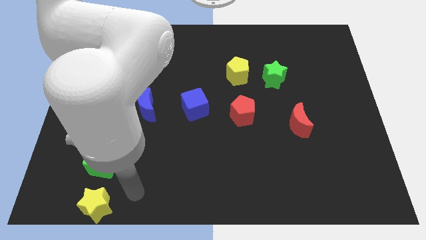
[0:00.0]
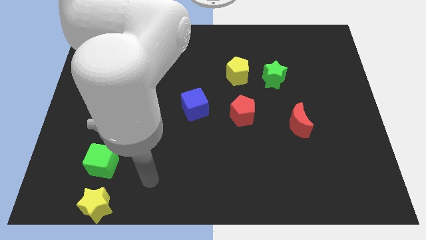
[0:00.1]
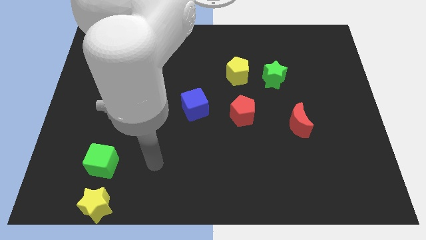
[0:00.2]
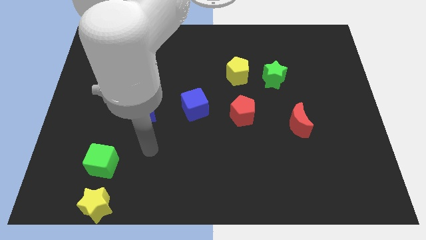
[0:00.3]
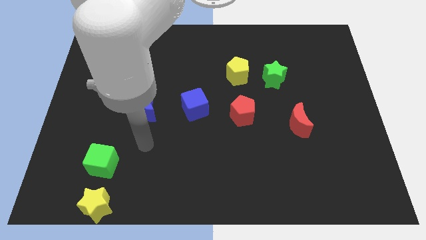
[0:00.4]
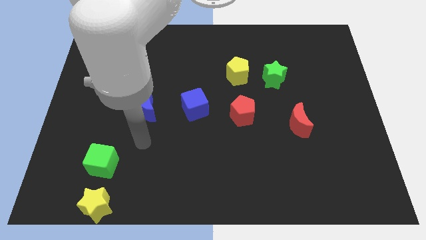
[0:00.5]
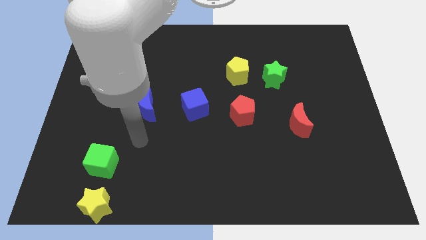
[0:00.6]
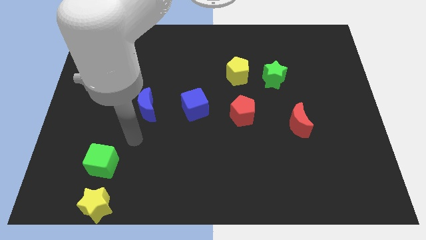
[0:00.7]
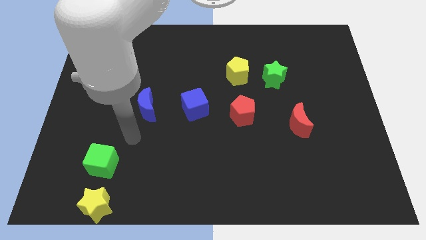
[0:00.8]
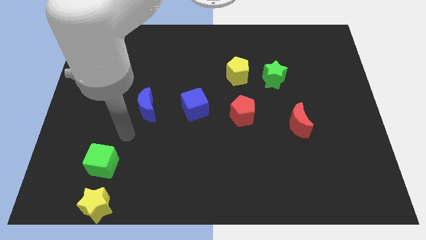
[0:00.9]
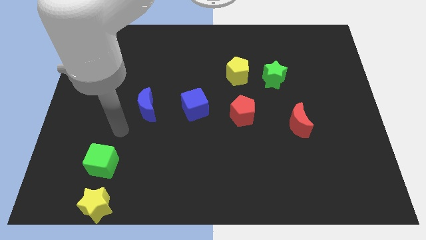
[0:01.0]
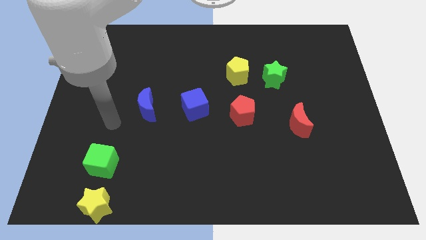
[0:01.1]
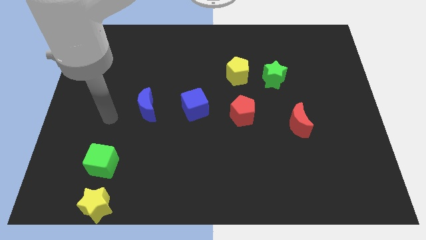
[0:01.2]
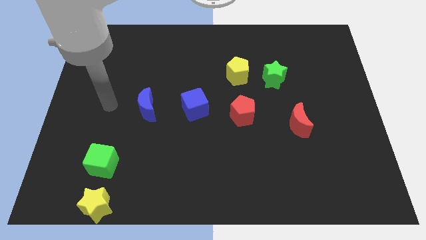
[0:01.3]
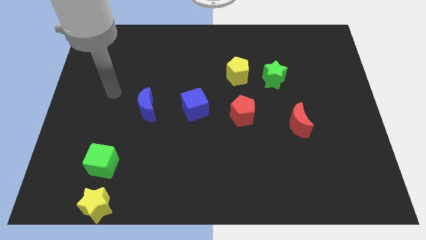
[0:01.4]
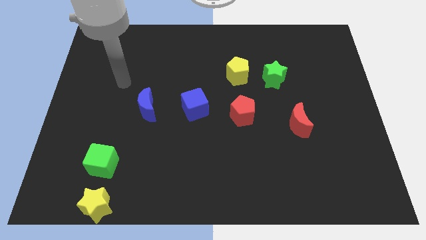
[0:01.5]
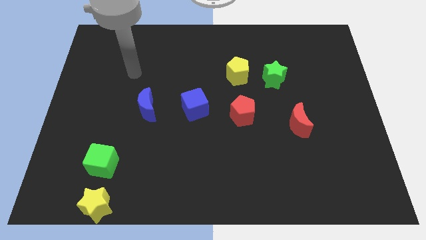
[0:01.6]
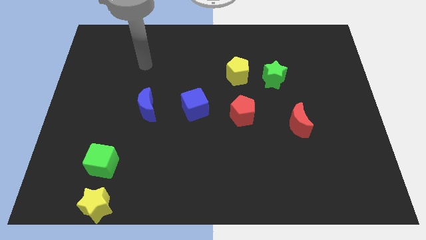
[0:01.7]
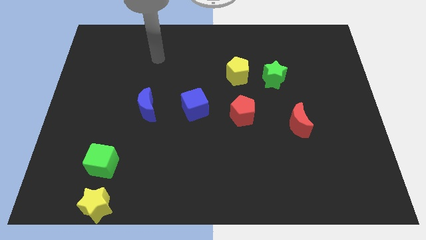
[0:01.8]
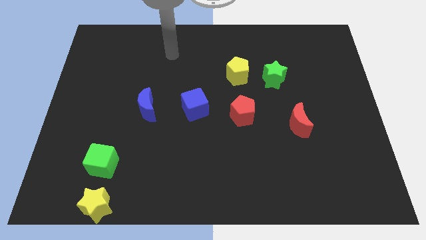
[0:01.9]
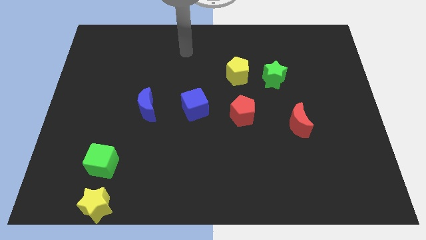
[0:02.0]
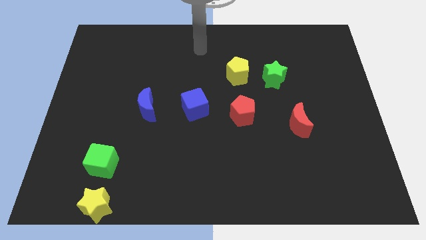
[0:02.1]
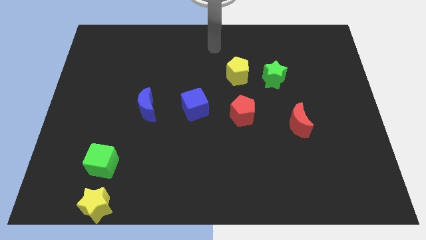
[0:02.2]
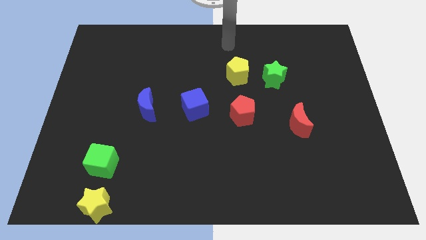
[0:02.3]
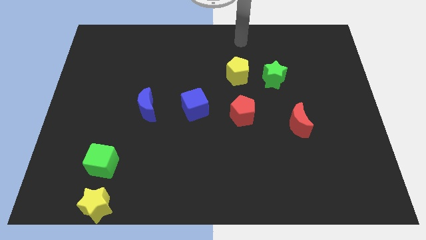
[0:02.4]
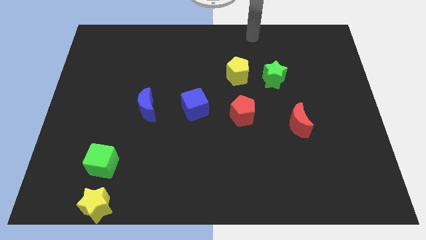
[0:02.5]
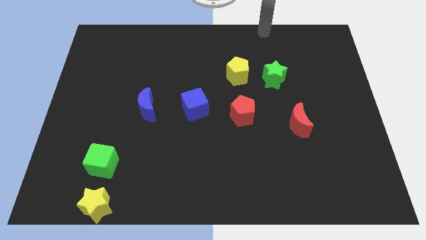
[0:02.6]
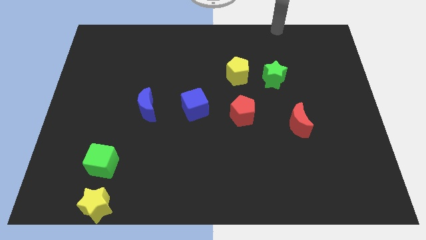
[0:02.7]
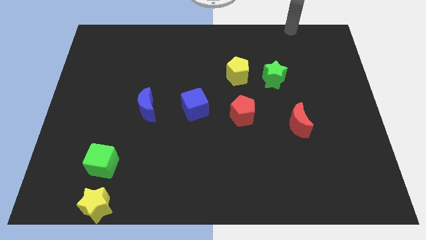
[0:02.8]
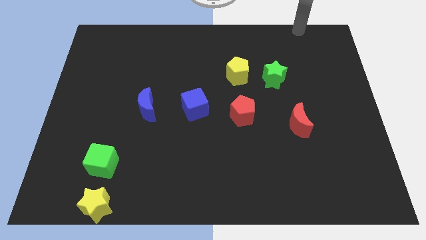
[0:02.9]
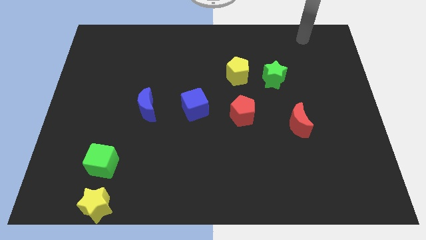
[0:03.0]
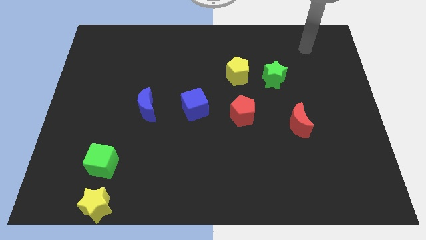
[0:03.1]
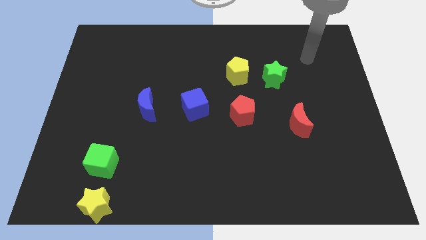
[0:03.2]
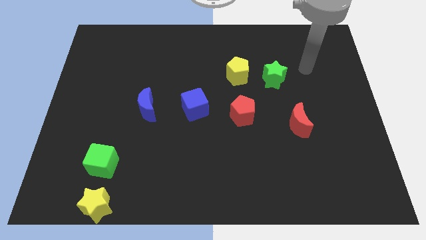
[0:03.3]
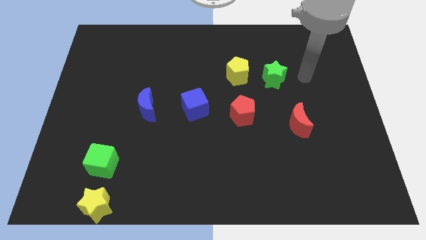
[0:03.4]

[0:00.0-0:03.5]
point the arm at the right of the green star

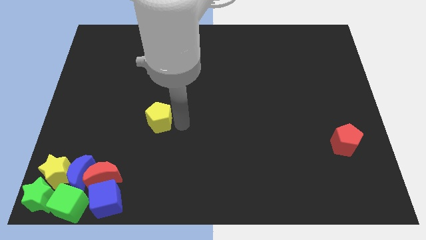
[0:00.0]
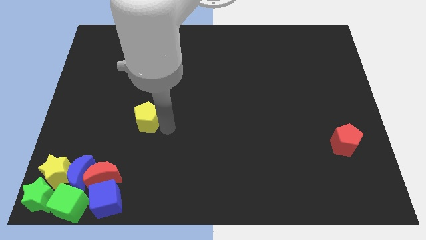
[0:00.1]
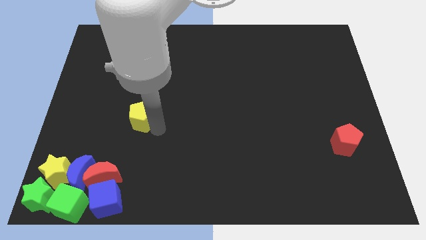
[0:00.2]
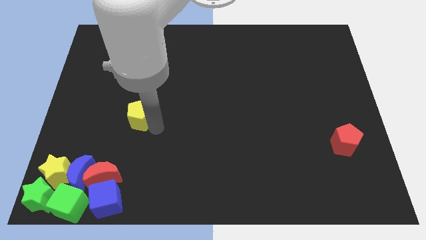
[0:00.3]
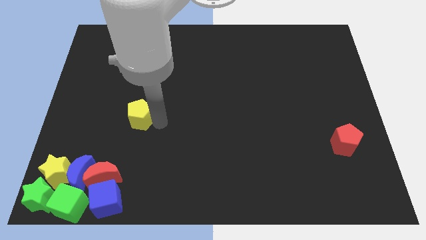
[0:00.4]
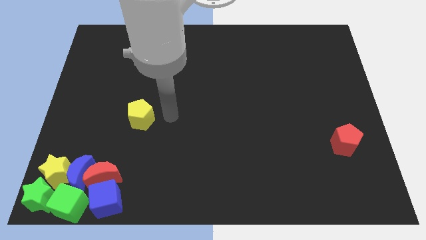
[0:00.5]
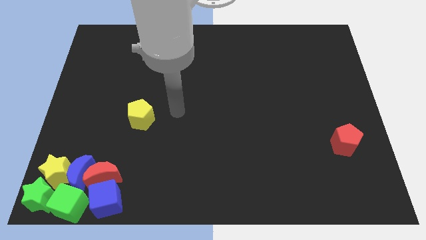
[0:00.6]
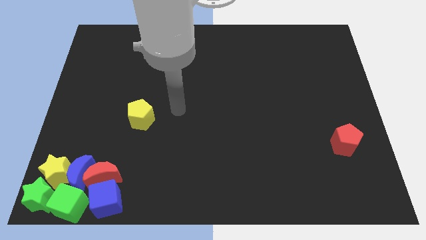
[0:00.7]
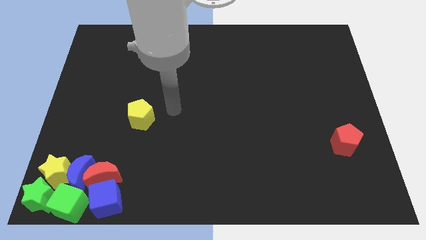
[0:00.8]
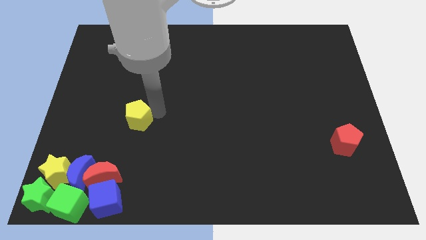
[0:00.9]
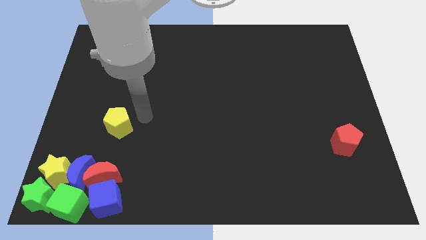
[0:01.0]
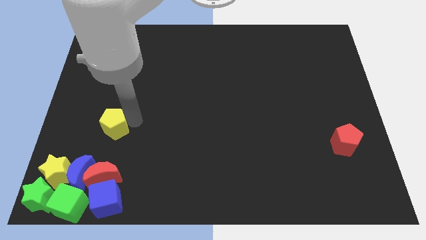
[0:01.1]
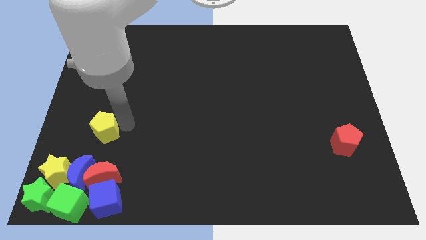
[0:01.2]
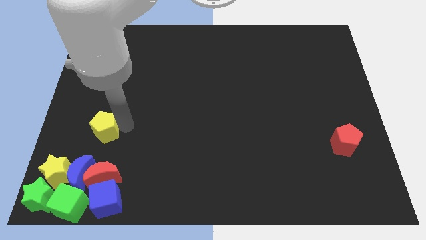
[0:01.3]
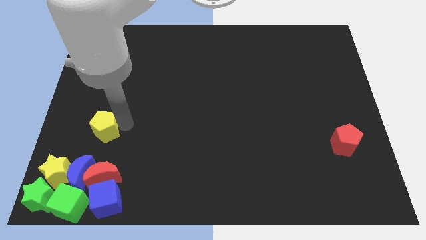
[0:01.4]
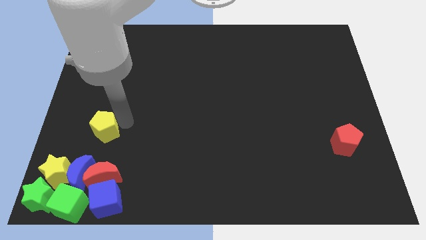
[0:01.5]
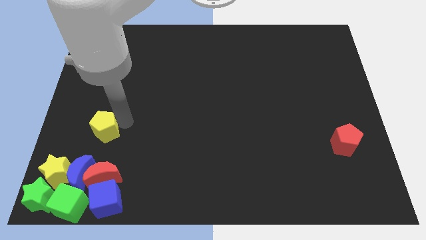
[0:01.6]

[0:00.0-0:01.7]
put the yellow pentagon above the red moon

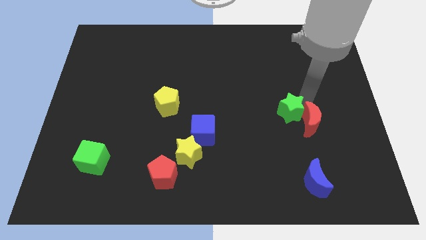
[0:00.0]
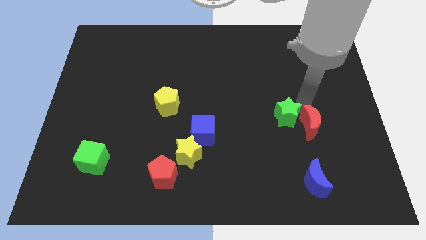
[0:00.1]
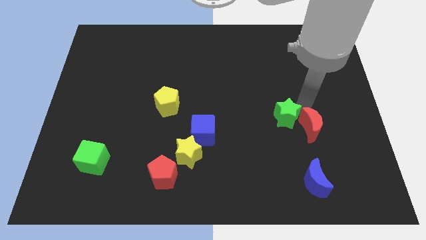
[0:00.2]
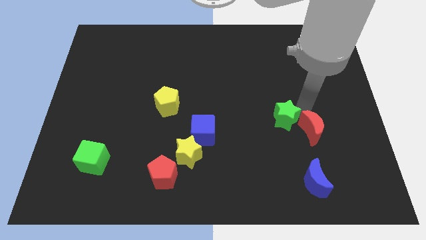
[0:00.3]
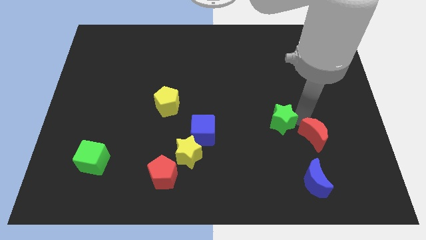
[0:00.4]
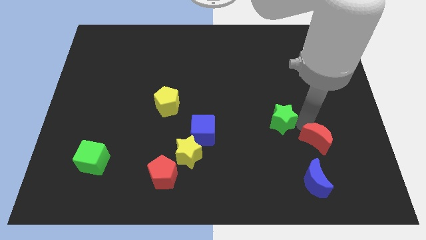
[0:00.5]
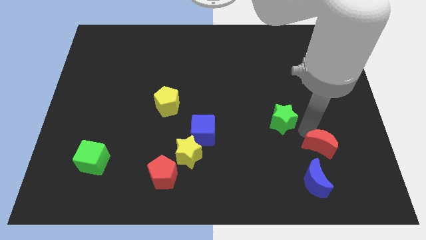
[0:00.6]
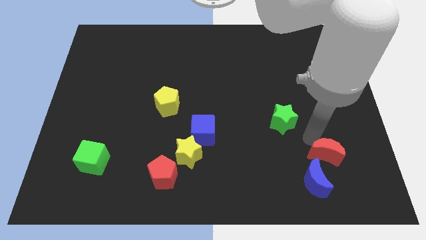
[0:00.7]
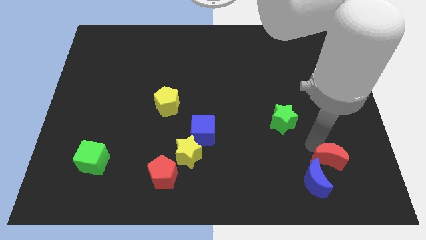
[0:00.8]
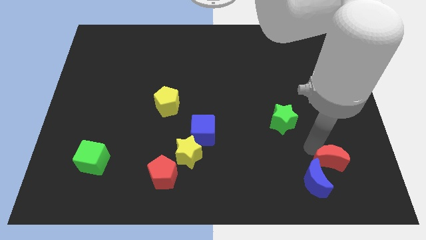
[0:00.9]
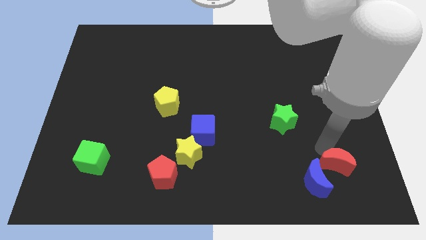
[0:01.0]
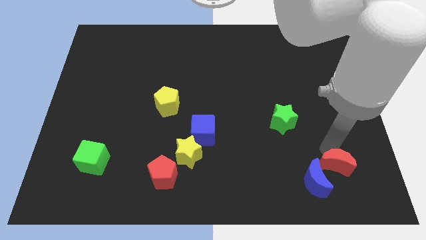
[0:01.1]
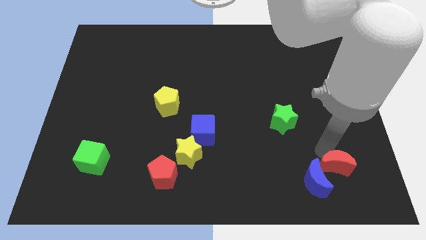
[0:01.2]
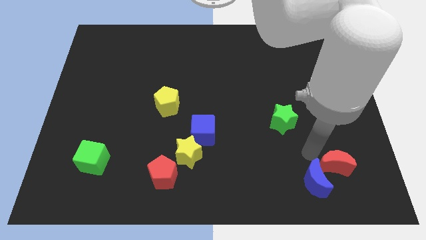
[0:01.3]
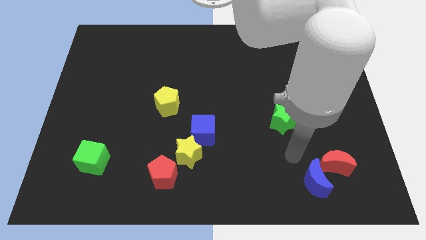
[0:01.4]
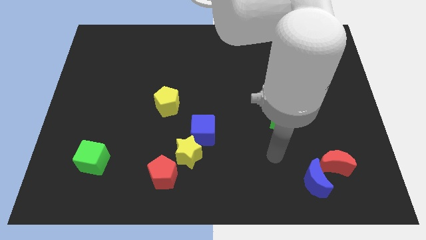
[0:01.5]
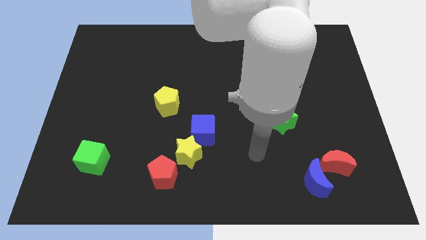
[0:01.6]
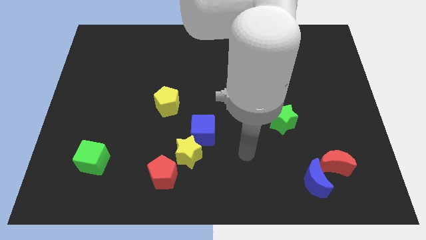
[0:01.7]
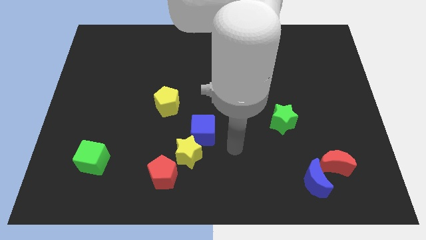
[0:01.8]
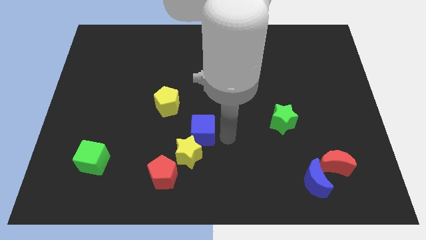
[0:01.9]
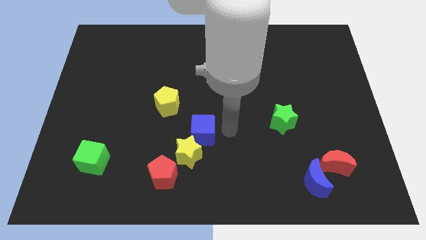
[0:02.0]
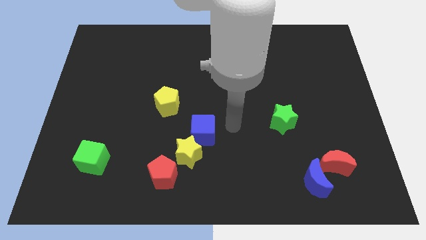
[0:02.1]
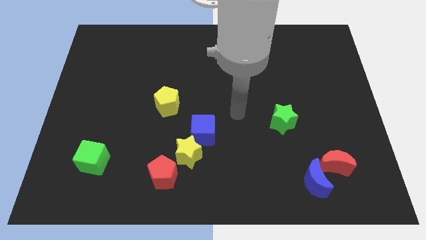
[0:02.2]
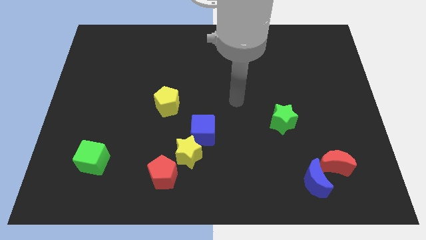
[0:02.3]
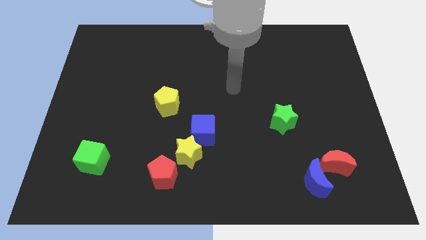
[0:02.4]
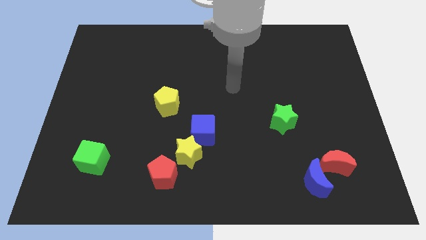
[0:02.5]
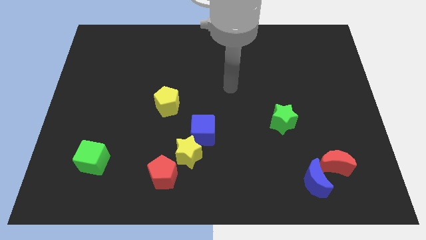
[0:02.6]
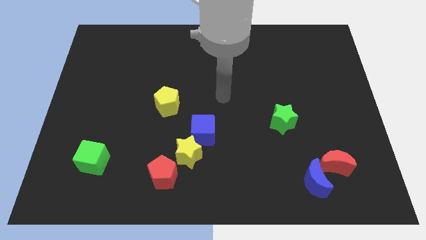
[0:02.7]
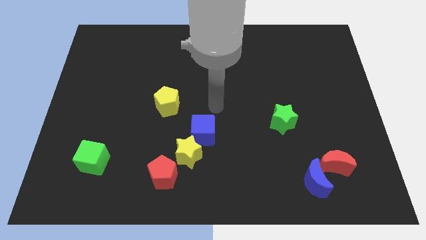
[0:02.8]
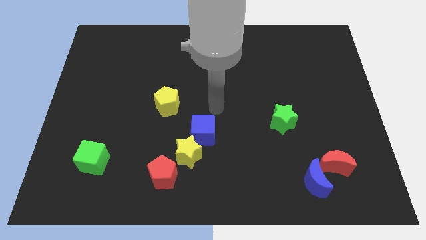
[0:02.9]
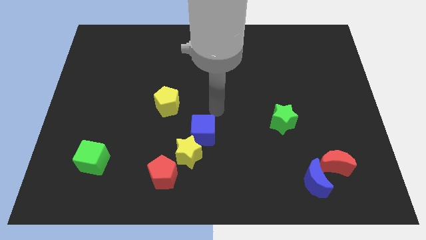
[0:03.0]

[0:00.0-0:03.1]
separate red moon from green star

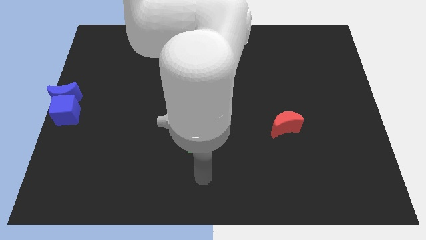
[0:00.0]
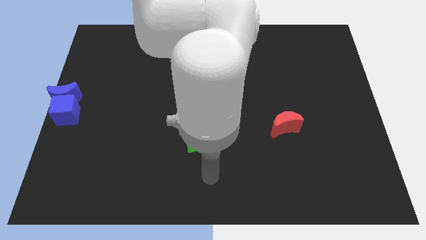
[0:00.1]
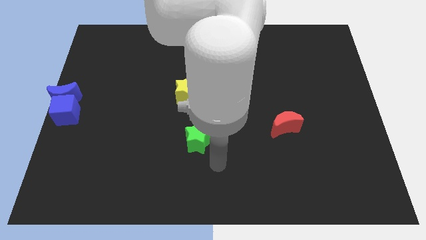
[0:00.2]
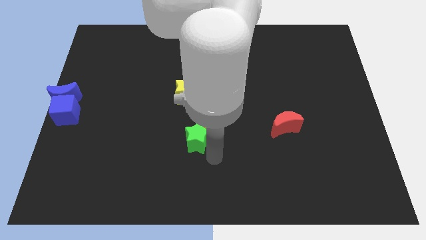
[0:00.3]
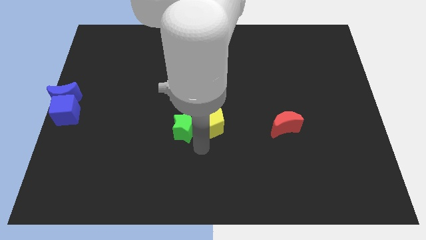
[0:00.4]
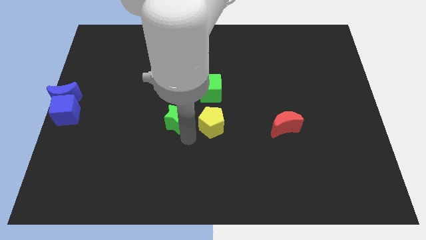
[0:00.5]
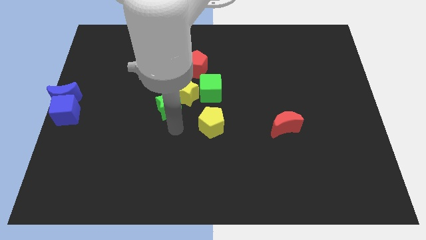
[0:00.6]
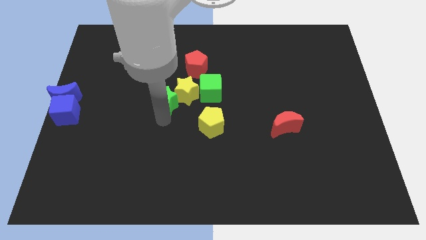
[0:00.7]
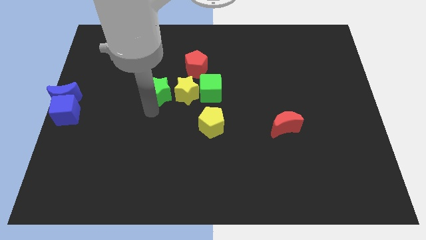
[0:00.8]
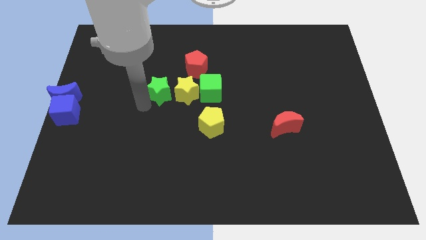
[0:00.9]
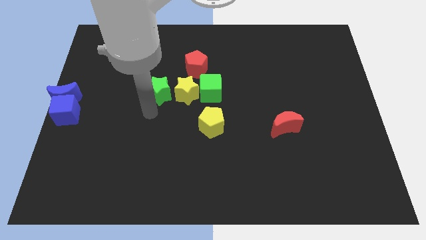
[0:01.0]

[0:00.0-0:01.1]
push the green star at the left side of the yellow star
